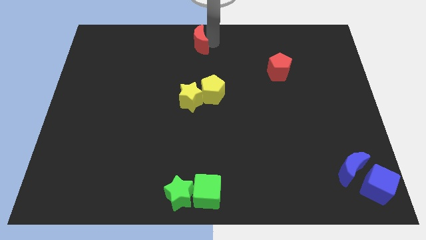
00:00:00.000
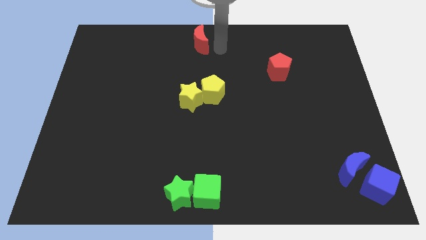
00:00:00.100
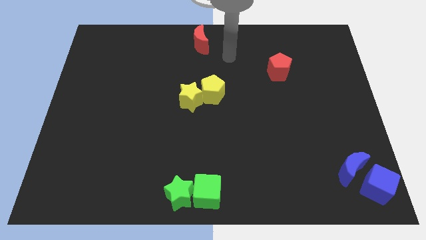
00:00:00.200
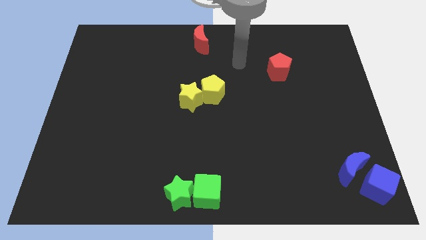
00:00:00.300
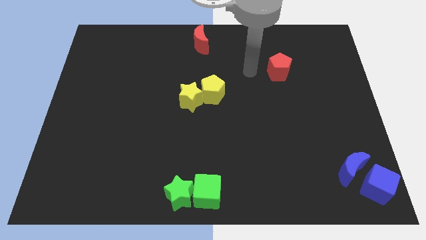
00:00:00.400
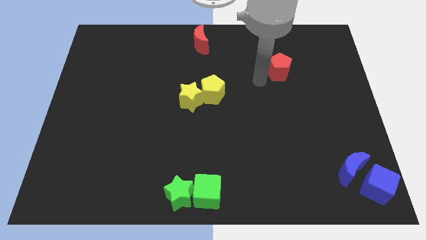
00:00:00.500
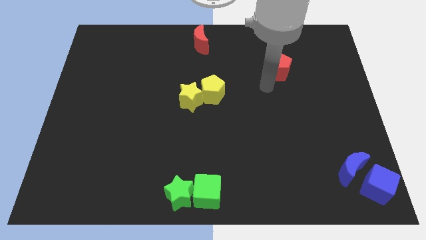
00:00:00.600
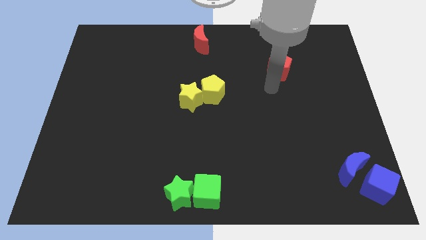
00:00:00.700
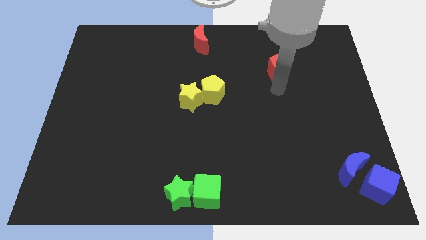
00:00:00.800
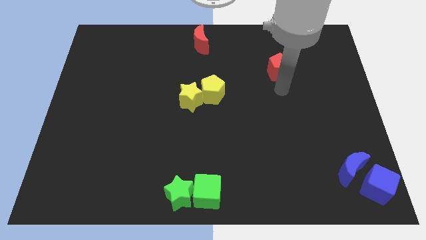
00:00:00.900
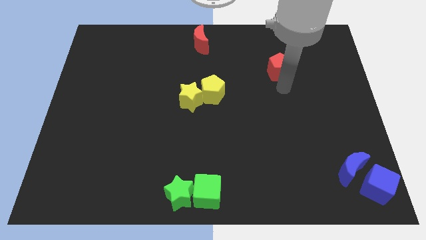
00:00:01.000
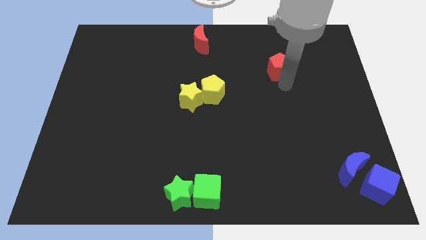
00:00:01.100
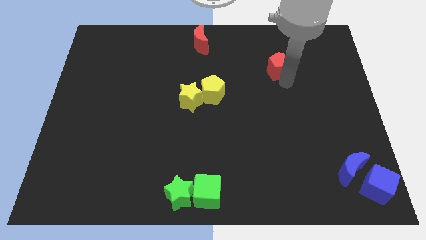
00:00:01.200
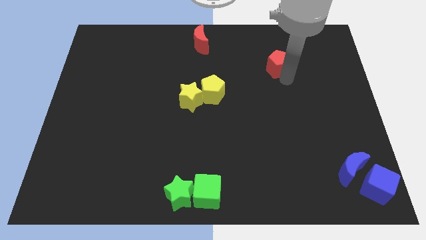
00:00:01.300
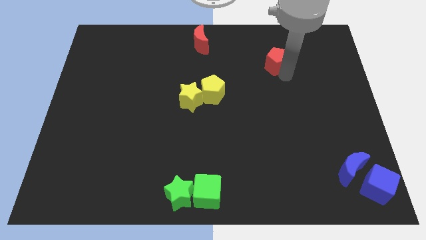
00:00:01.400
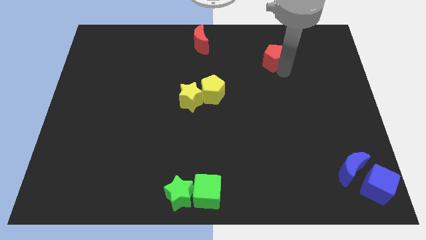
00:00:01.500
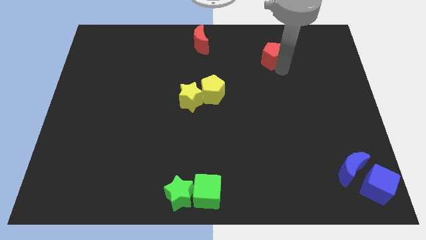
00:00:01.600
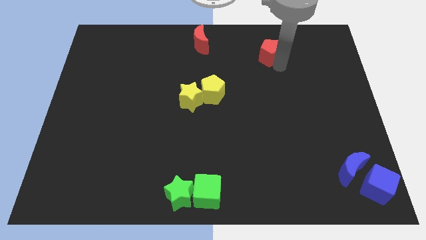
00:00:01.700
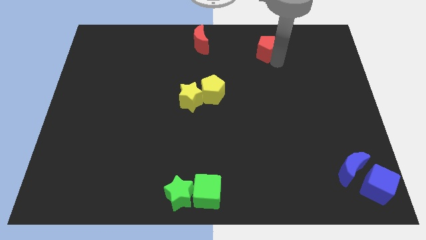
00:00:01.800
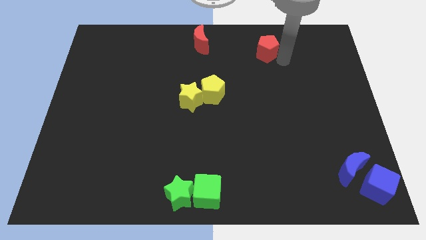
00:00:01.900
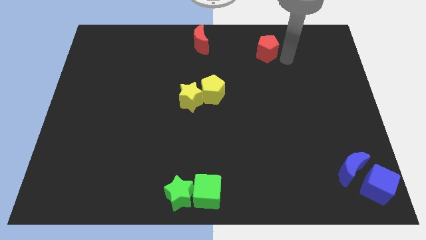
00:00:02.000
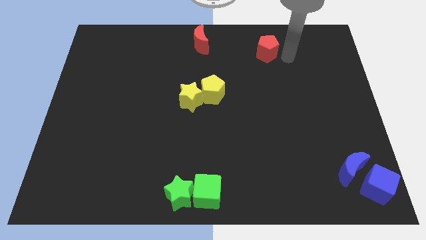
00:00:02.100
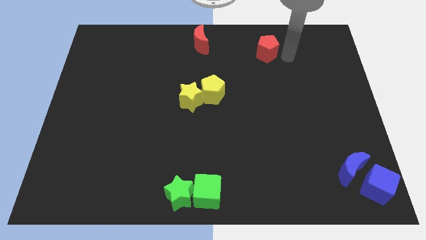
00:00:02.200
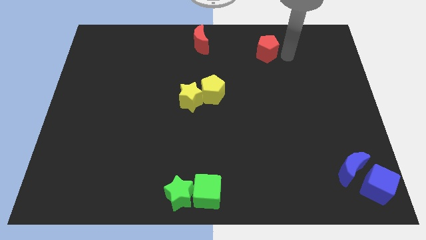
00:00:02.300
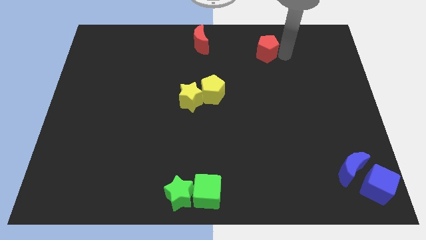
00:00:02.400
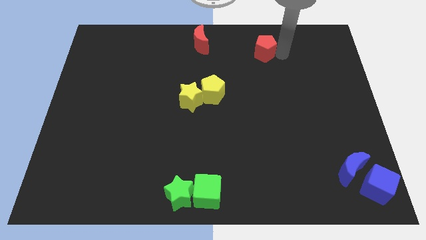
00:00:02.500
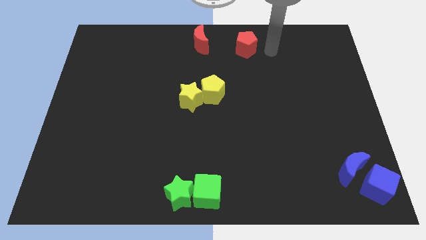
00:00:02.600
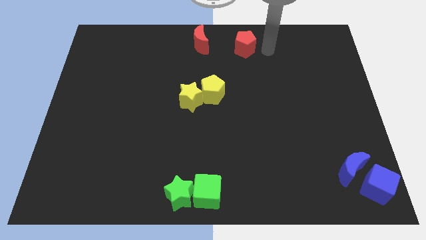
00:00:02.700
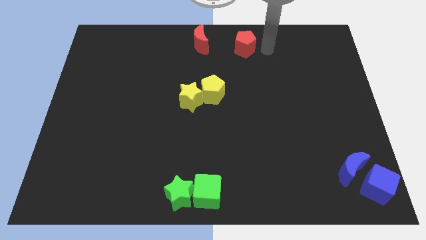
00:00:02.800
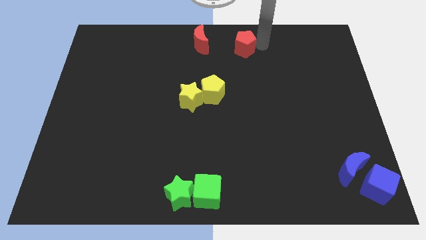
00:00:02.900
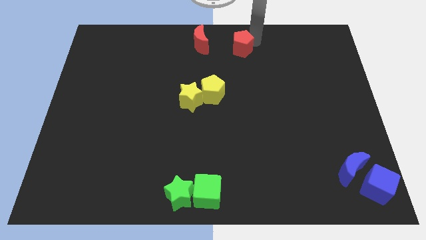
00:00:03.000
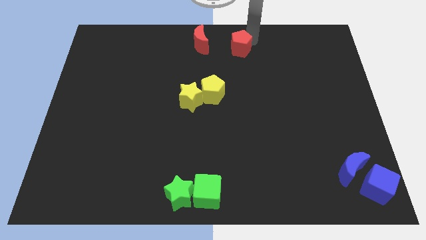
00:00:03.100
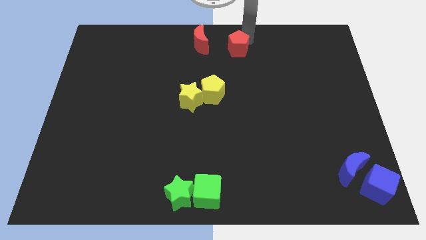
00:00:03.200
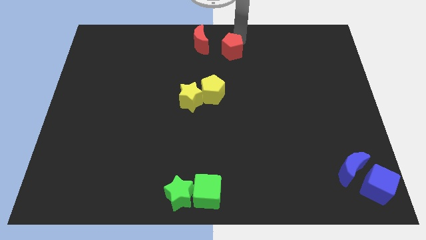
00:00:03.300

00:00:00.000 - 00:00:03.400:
push the red pentagon to the right of the red crescent

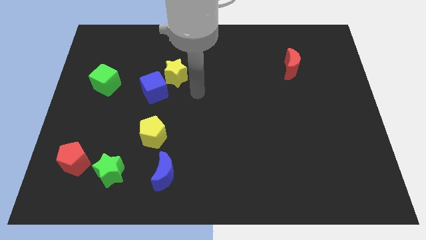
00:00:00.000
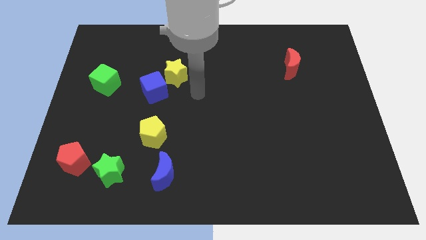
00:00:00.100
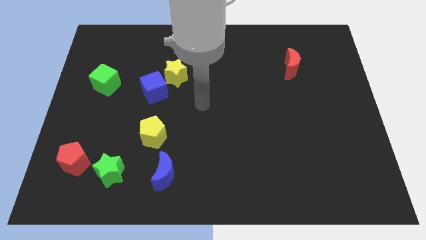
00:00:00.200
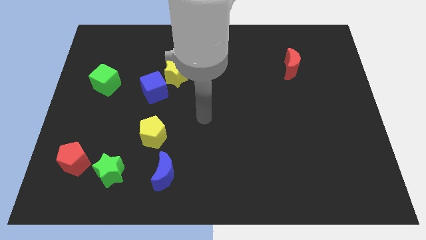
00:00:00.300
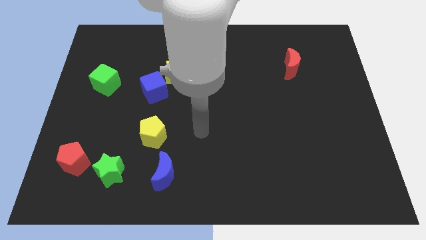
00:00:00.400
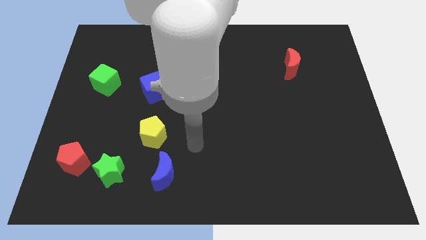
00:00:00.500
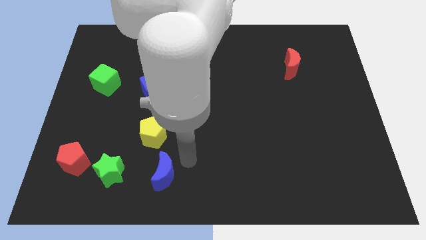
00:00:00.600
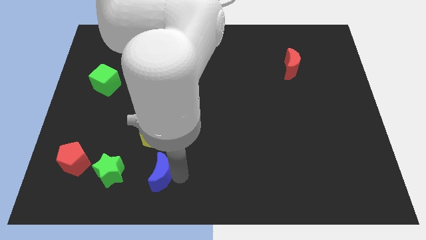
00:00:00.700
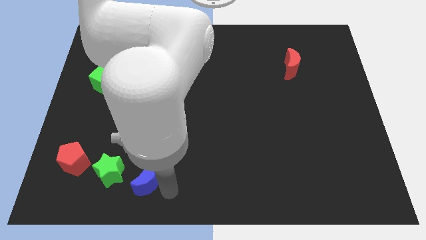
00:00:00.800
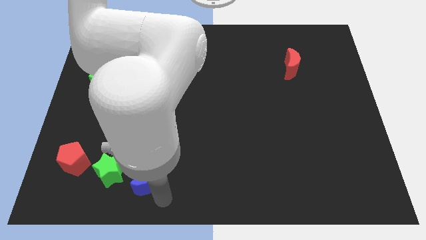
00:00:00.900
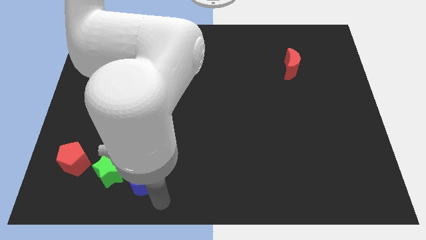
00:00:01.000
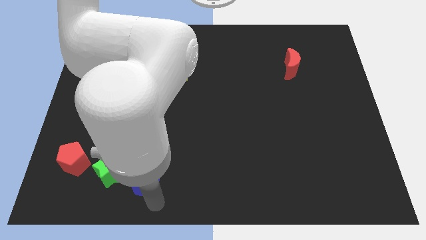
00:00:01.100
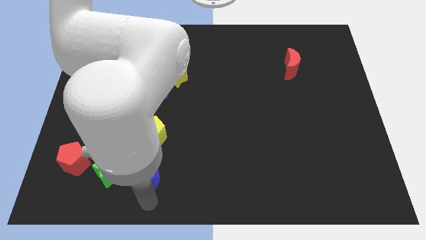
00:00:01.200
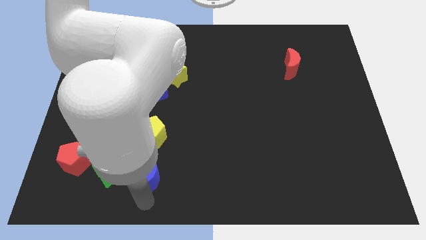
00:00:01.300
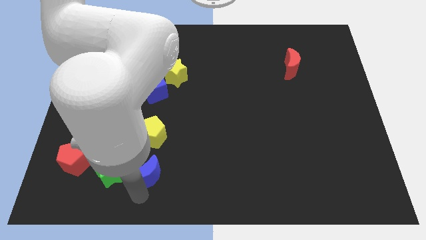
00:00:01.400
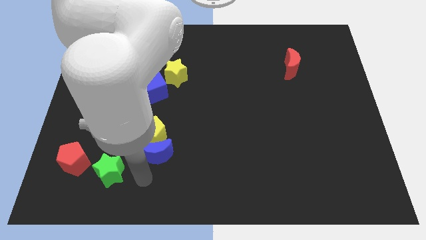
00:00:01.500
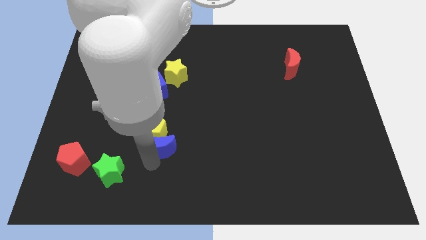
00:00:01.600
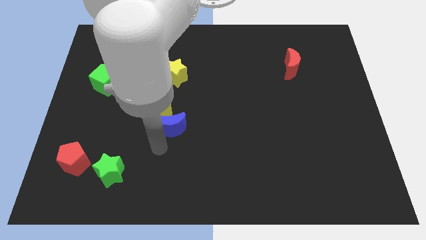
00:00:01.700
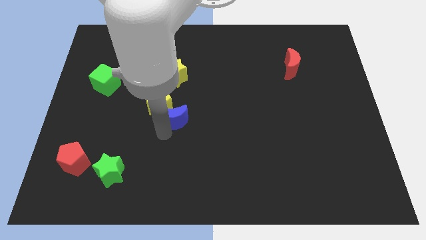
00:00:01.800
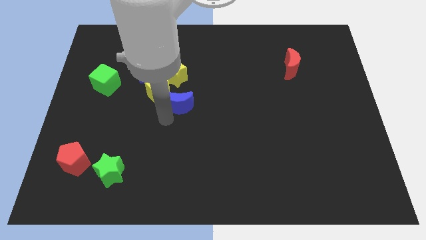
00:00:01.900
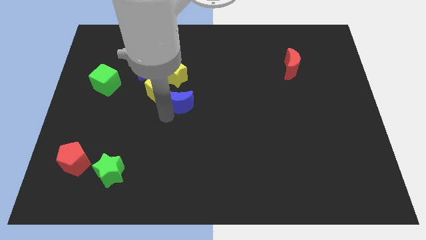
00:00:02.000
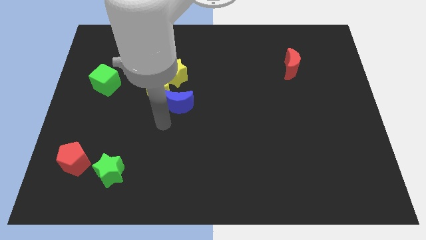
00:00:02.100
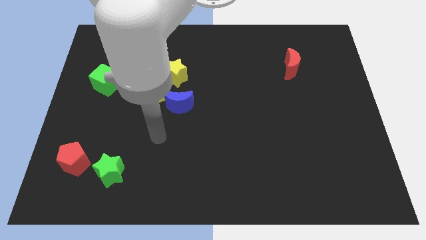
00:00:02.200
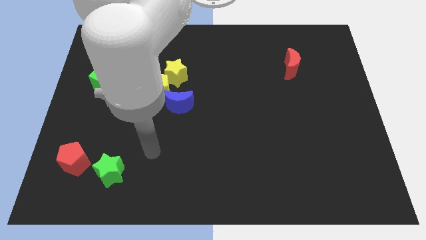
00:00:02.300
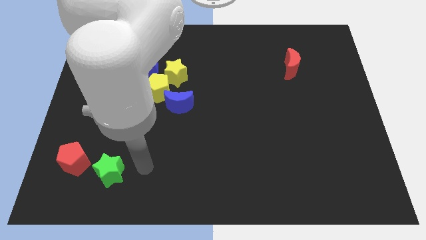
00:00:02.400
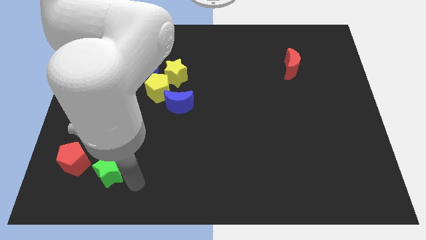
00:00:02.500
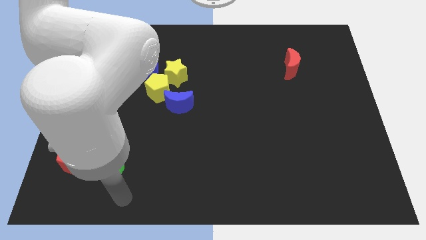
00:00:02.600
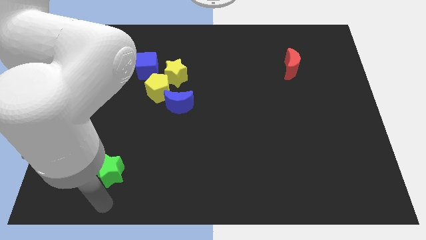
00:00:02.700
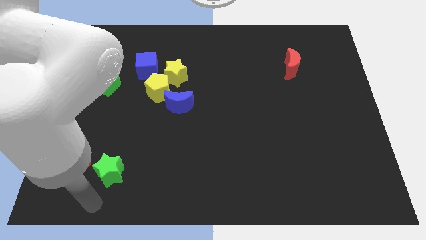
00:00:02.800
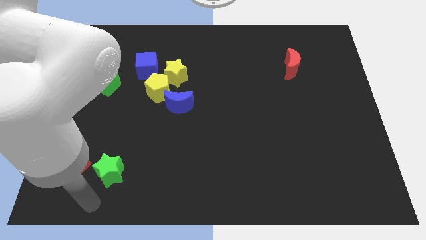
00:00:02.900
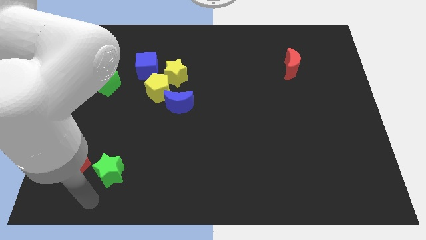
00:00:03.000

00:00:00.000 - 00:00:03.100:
push the blue moon towards the center of board

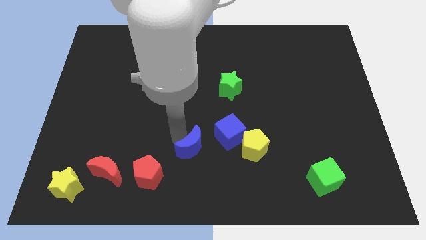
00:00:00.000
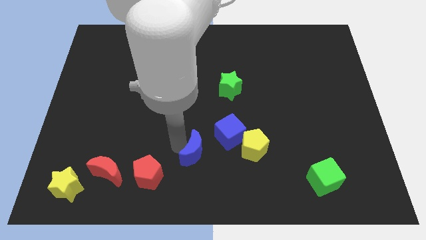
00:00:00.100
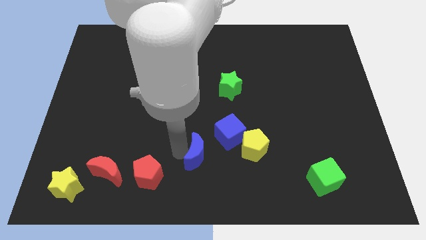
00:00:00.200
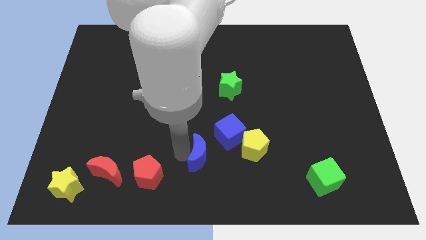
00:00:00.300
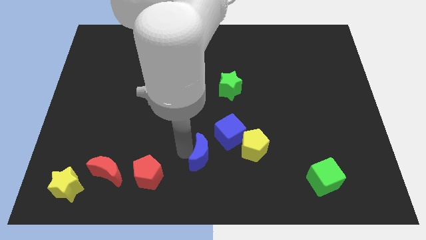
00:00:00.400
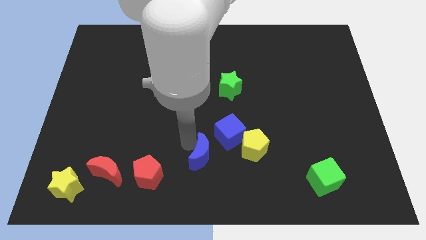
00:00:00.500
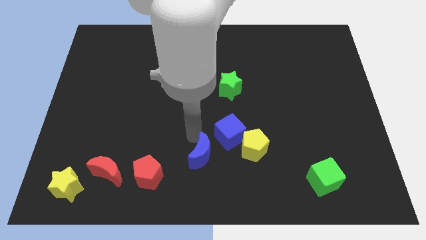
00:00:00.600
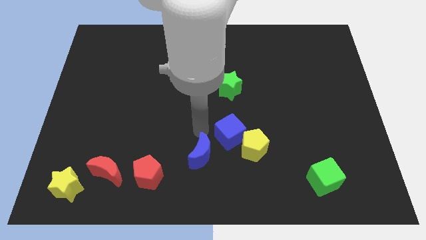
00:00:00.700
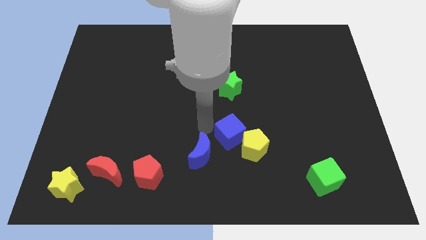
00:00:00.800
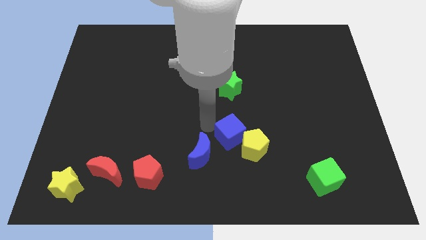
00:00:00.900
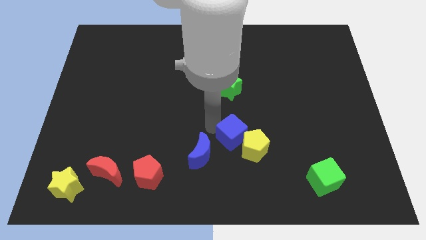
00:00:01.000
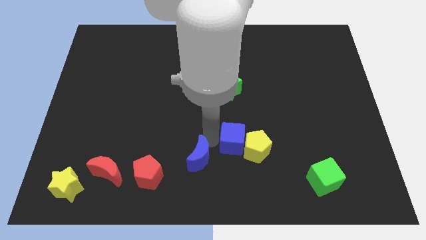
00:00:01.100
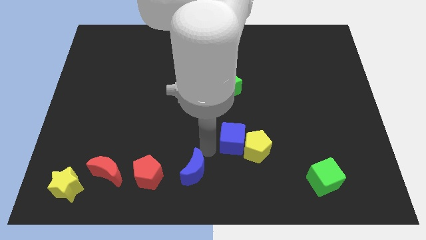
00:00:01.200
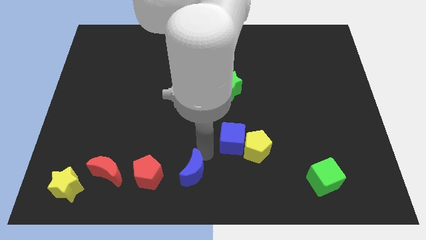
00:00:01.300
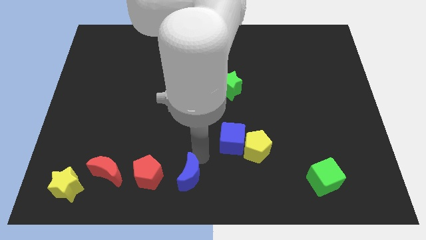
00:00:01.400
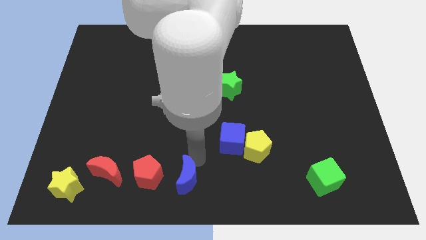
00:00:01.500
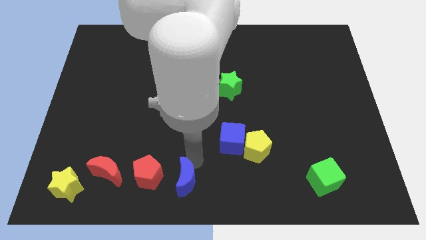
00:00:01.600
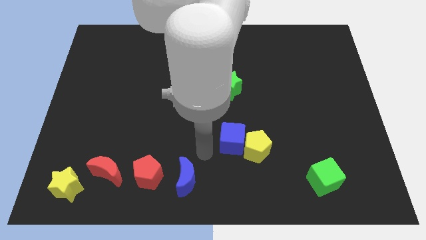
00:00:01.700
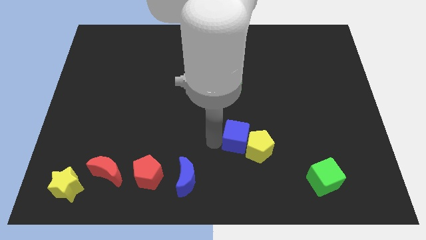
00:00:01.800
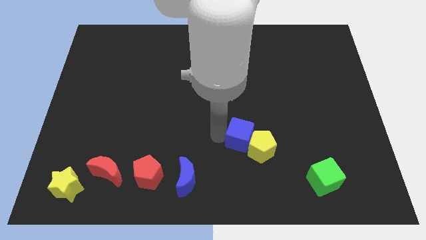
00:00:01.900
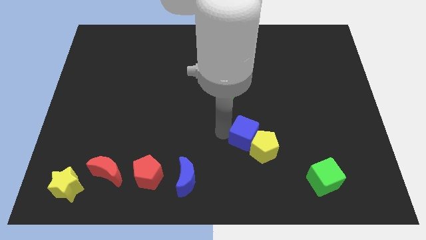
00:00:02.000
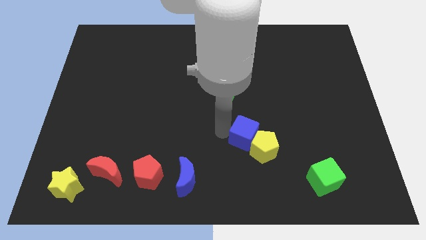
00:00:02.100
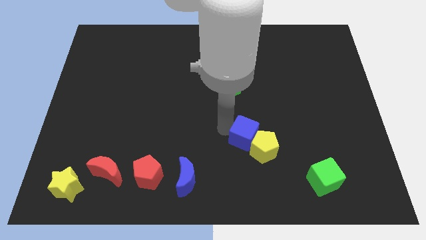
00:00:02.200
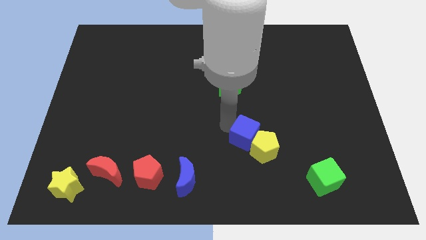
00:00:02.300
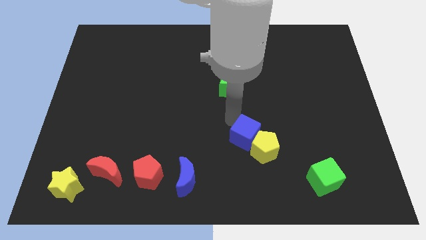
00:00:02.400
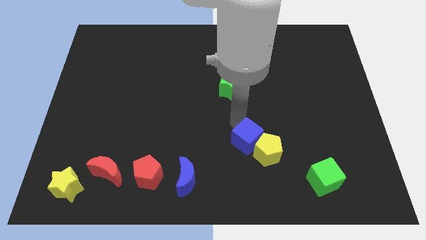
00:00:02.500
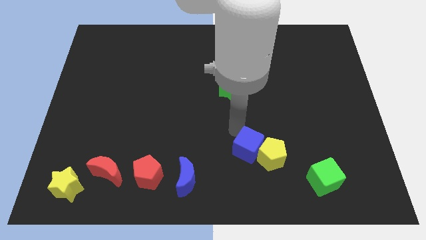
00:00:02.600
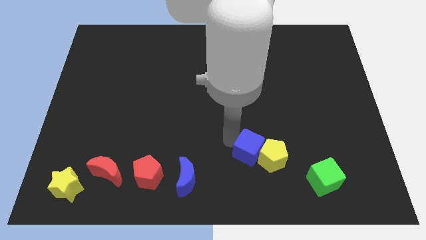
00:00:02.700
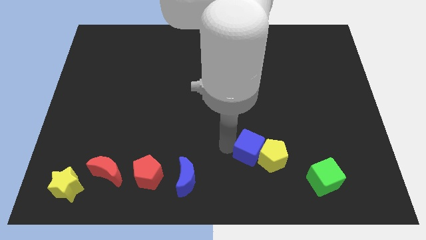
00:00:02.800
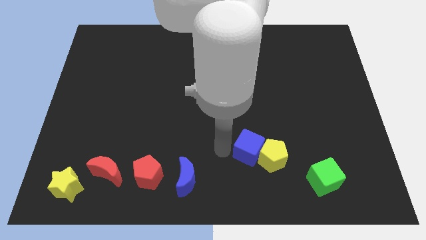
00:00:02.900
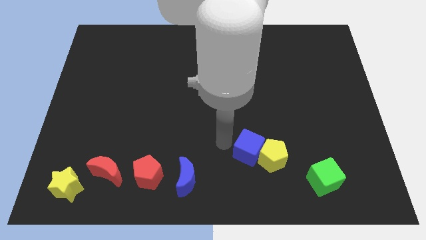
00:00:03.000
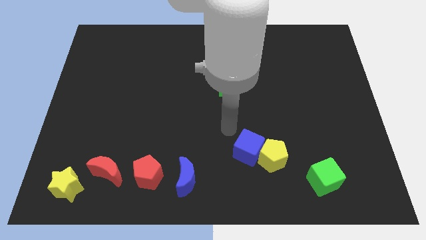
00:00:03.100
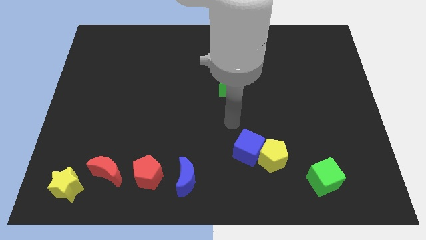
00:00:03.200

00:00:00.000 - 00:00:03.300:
move blue cube into yellow pentagon
